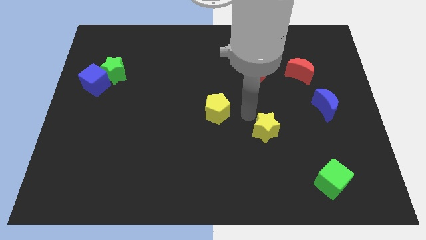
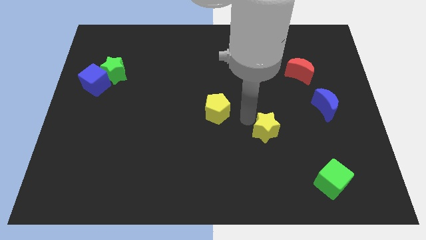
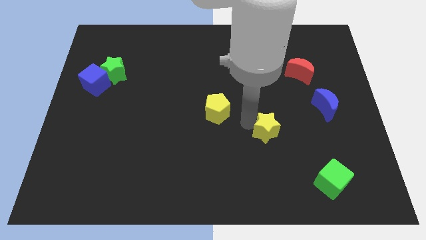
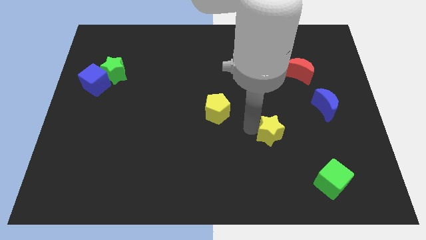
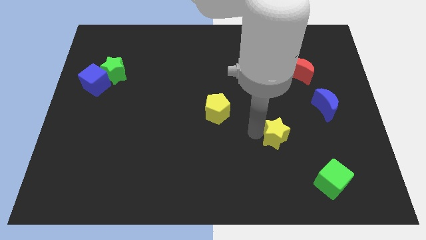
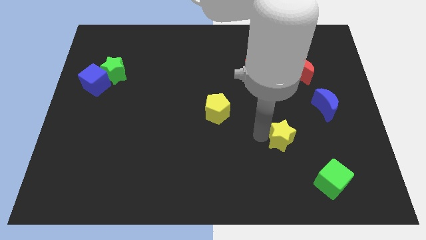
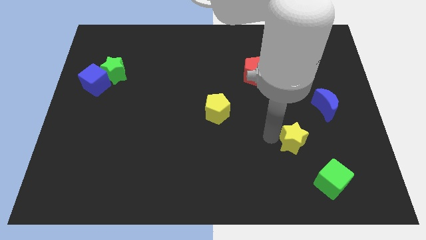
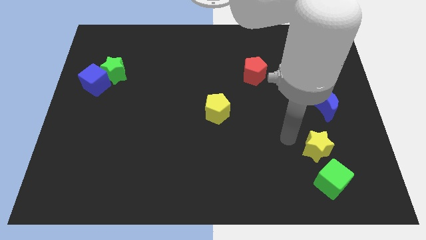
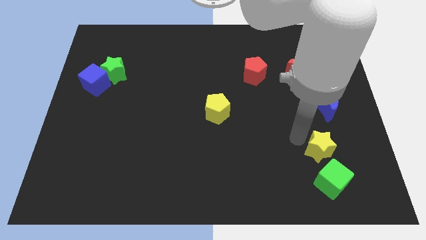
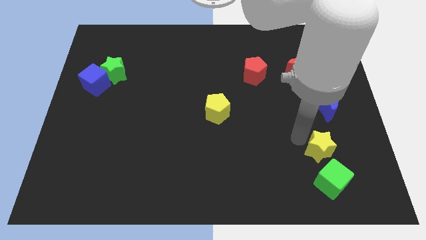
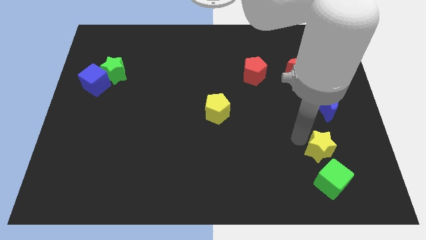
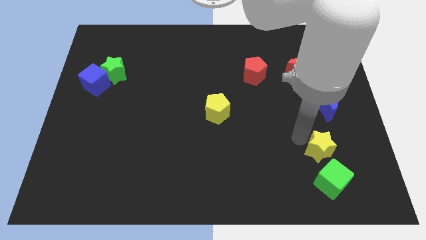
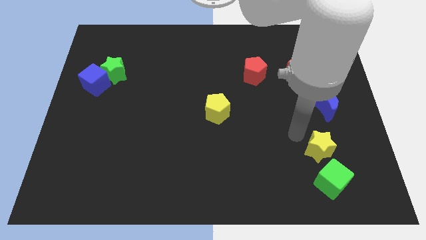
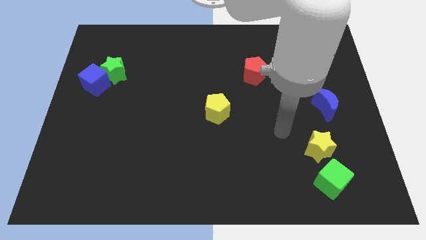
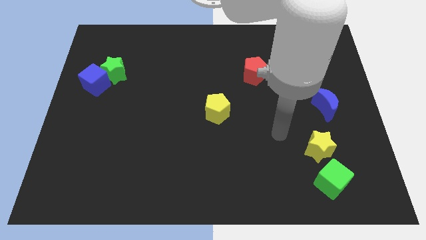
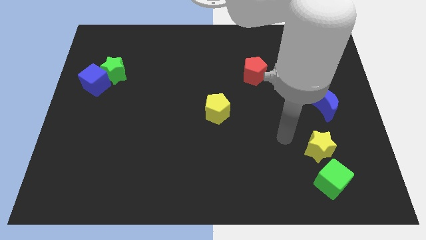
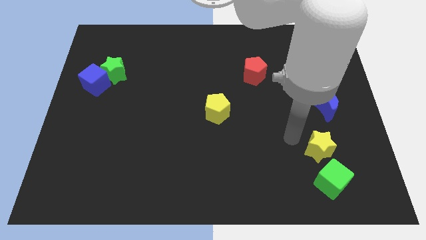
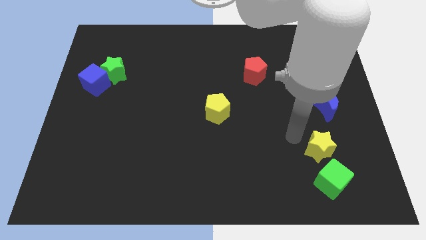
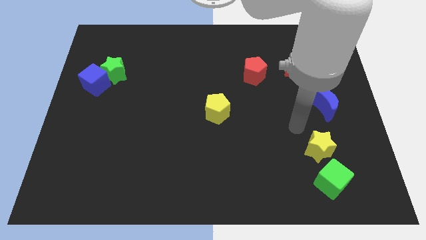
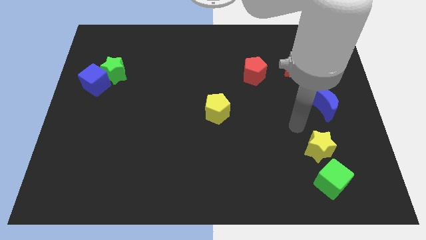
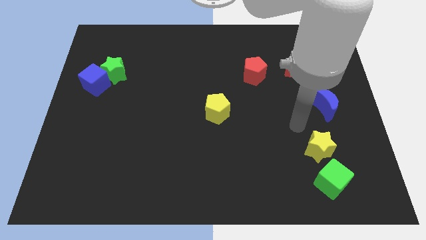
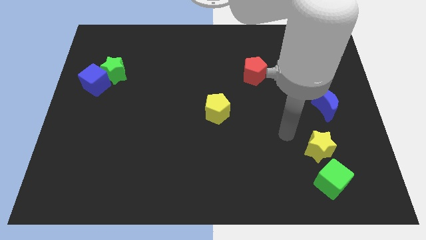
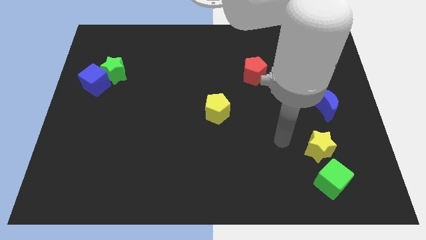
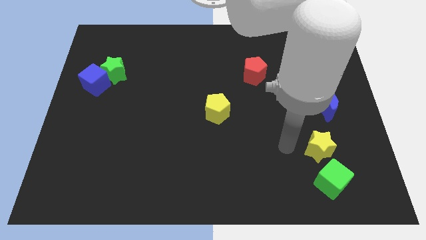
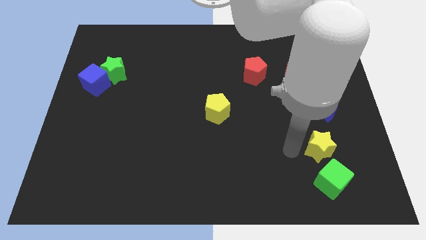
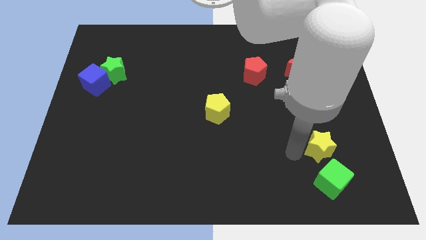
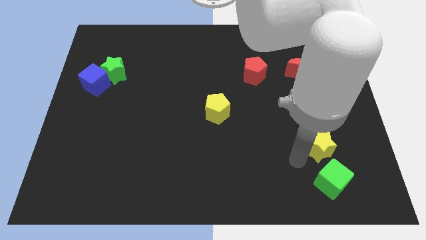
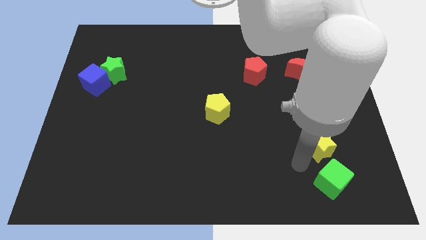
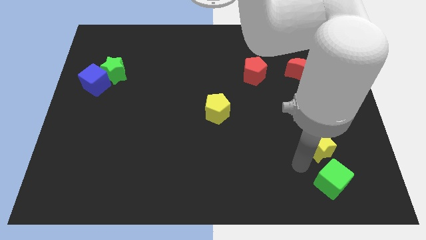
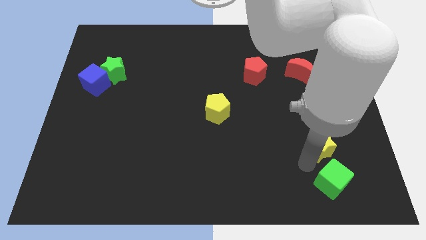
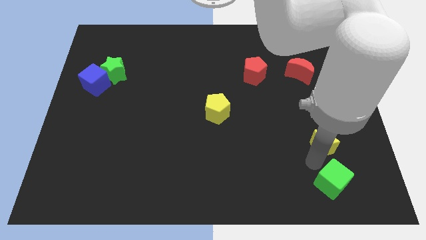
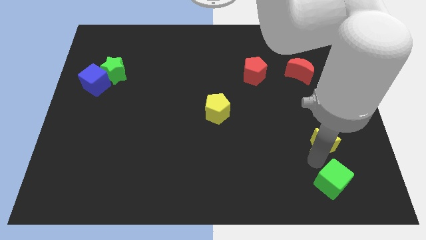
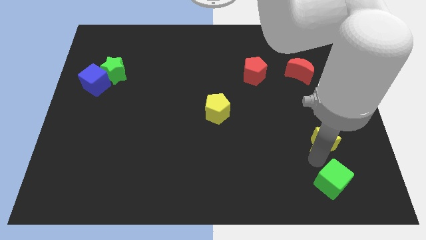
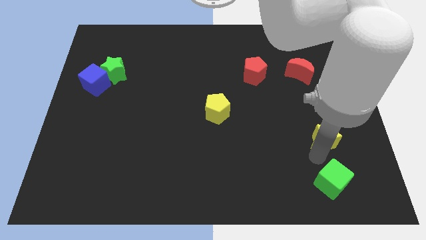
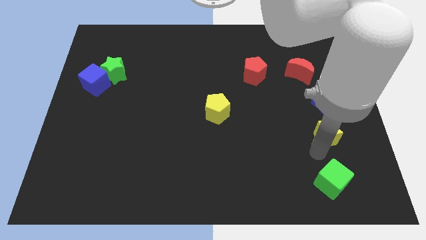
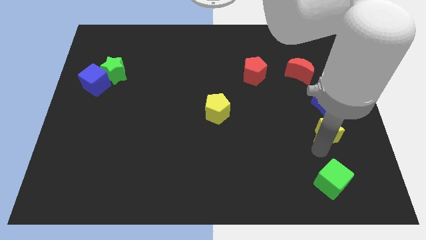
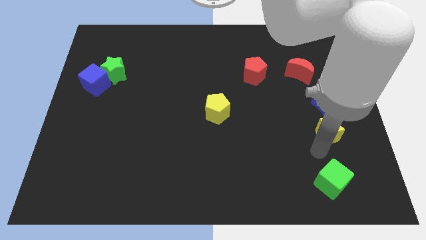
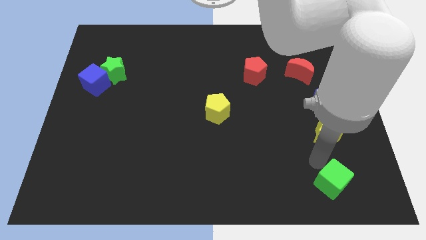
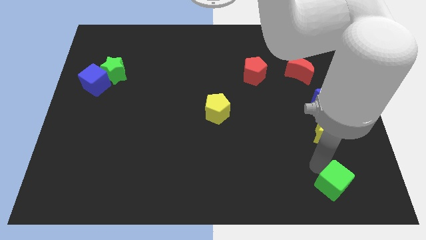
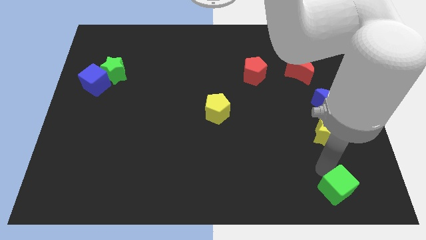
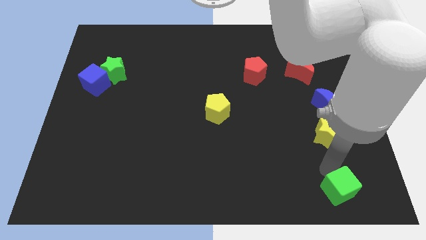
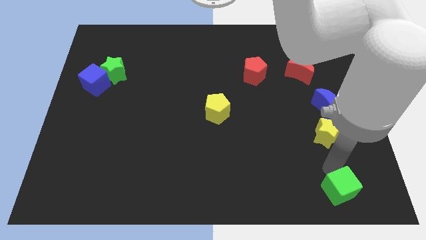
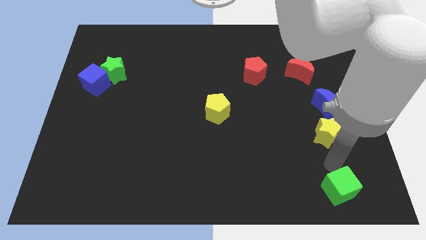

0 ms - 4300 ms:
move the yellow star below the blue moon

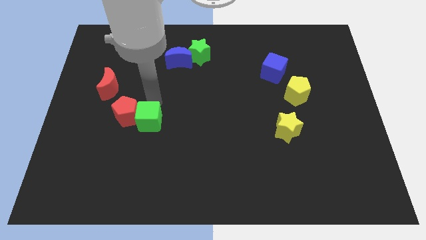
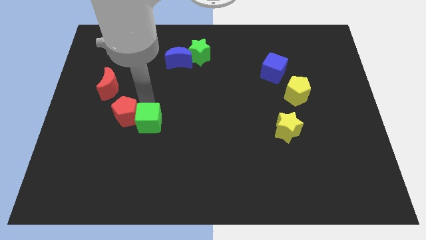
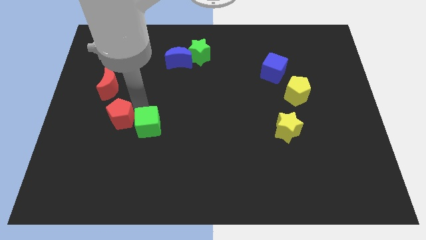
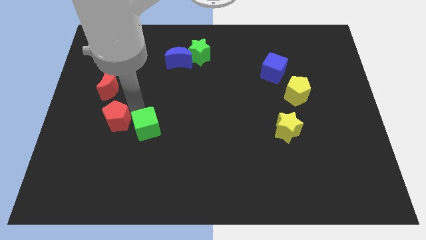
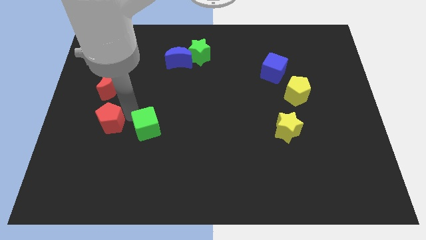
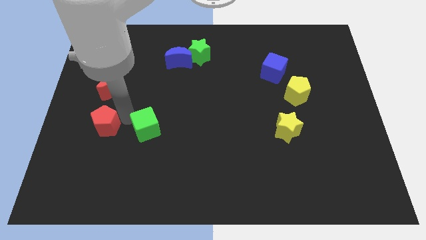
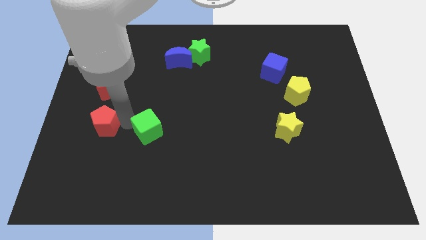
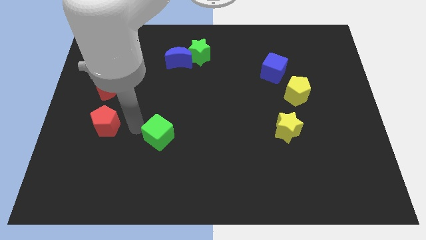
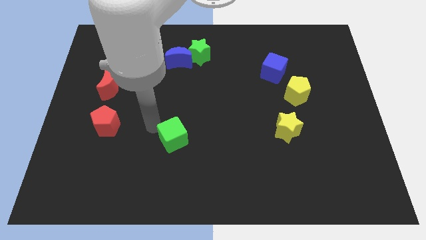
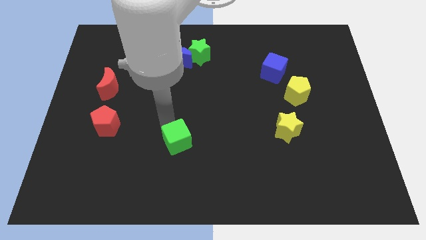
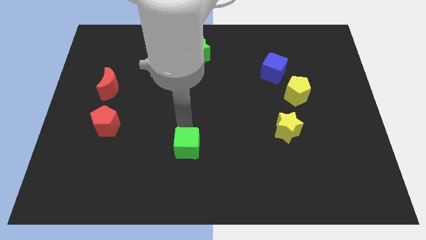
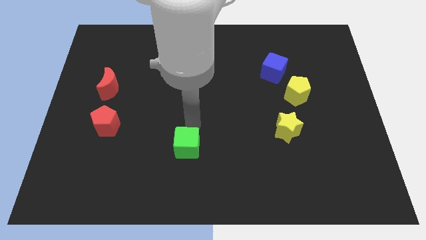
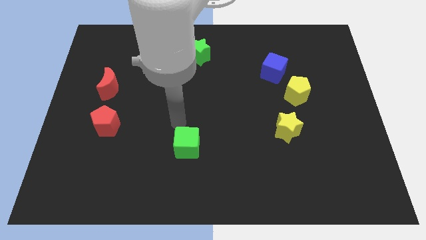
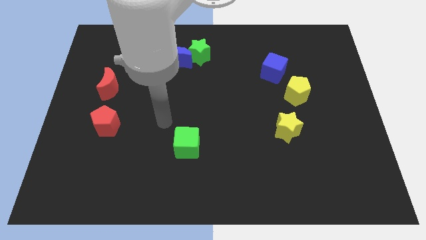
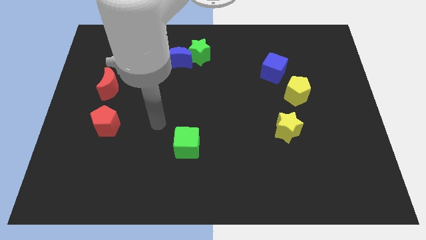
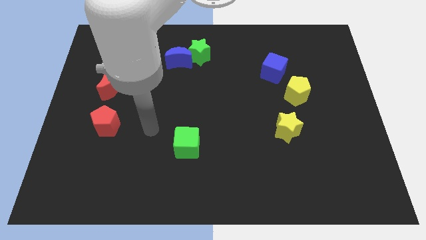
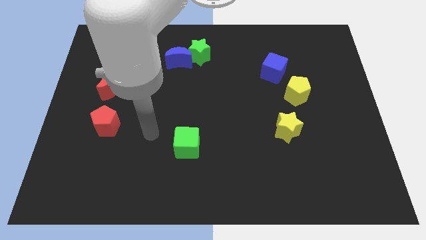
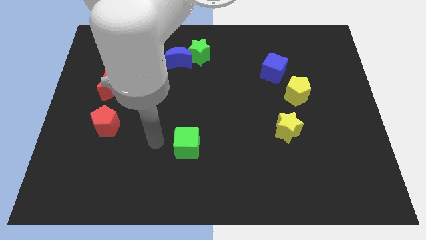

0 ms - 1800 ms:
separate the green star from the red pentagon

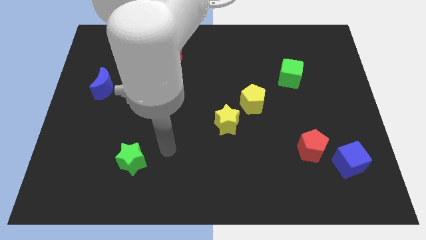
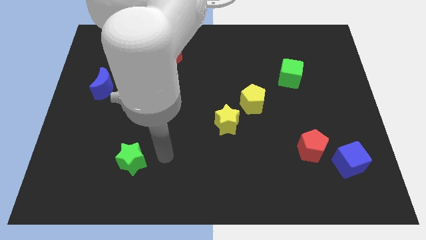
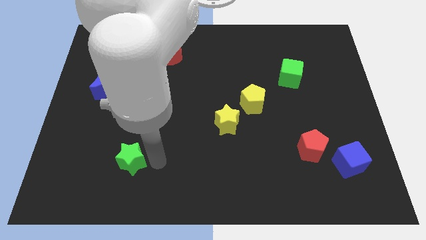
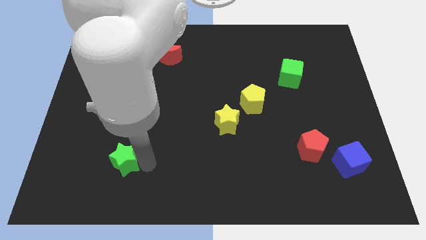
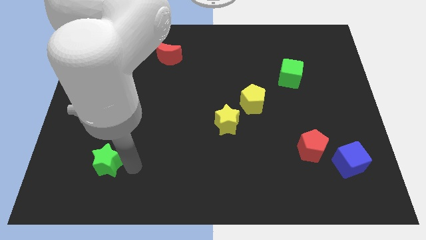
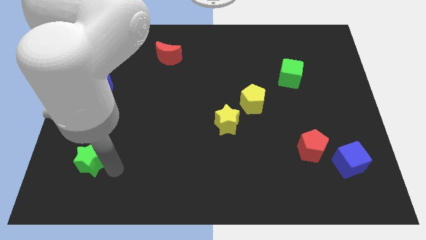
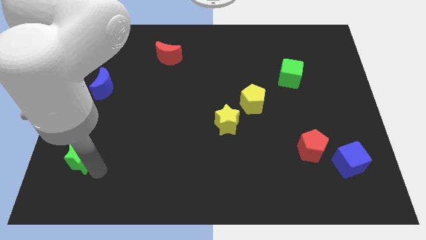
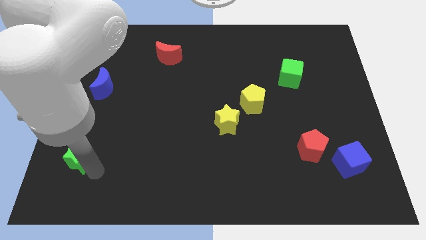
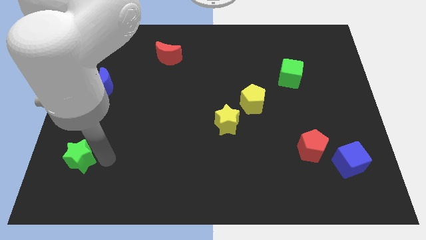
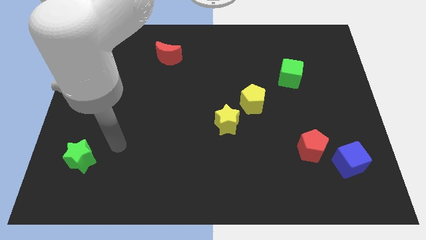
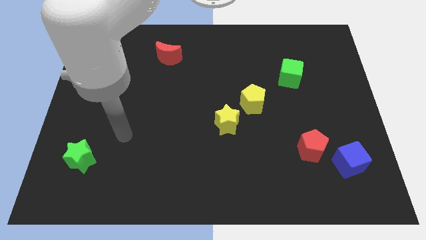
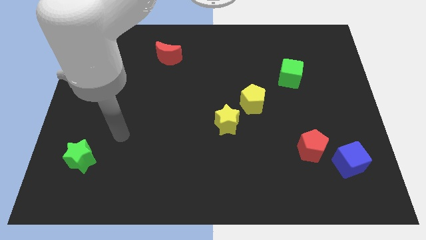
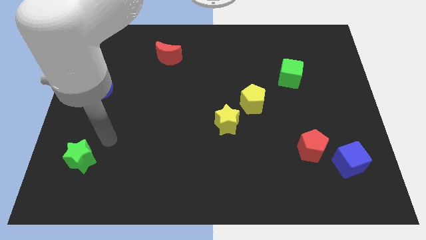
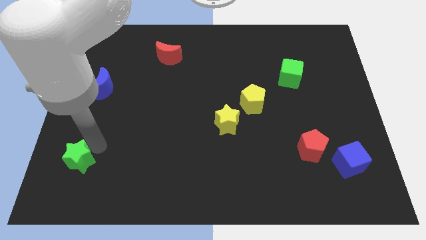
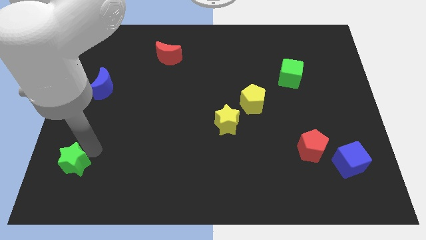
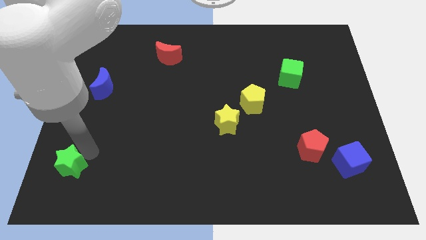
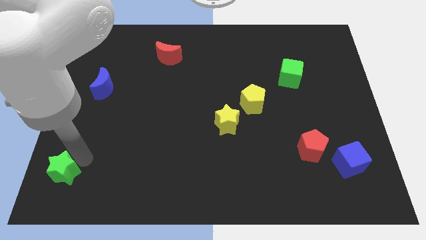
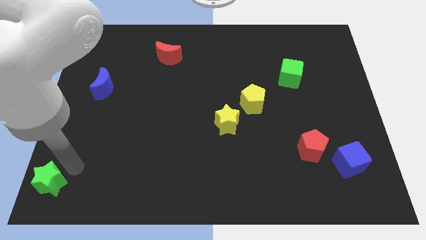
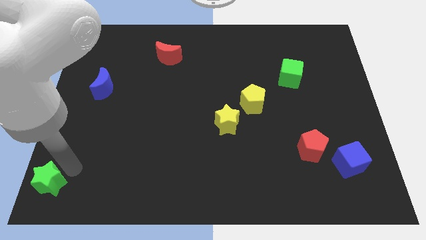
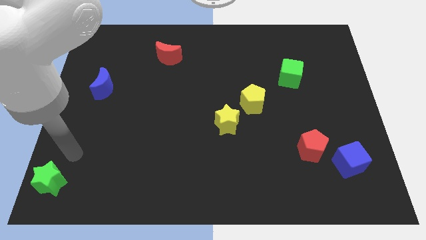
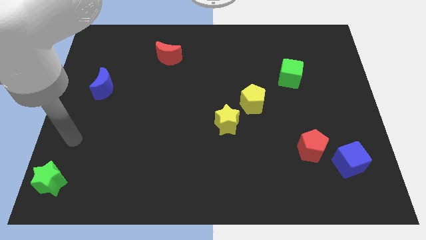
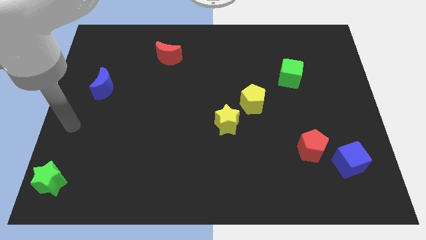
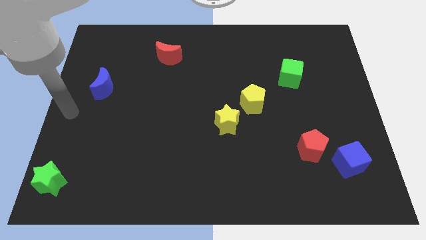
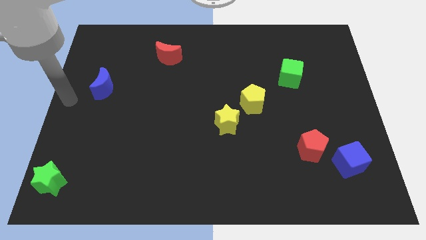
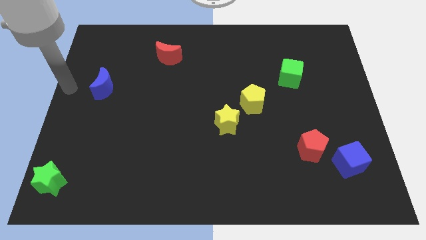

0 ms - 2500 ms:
move the green star to the bottom left of the board

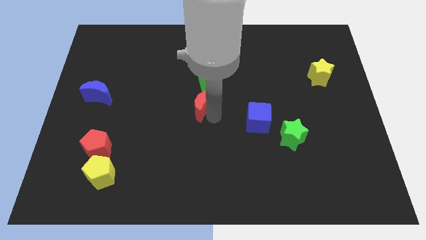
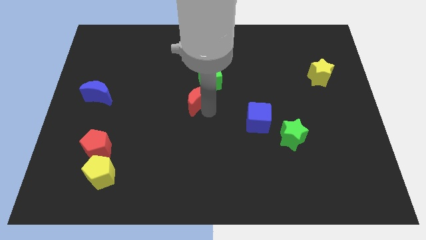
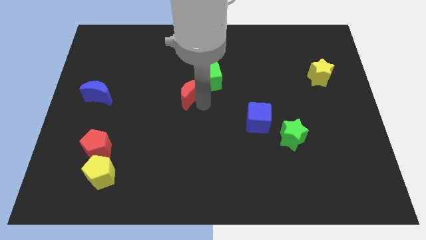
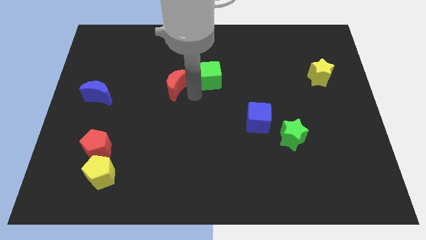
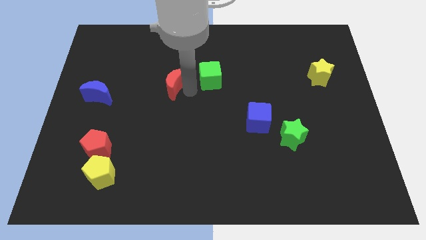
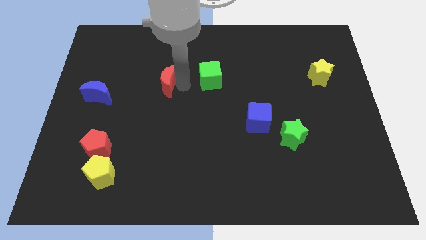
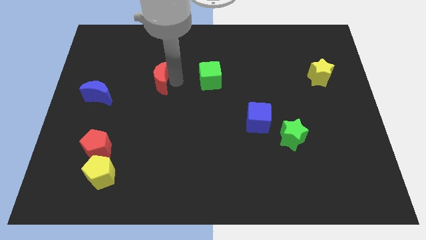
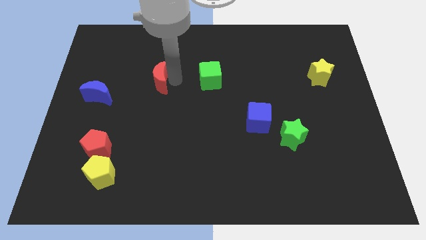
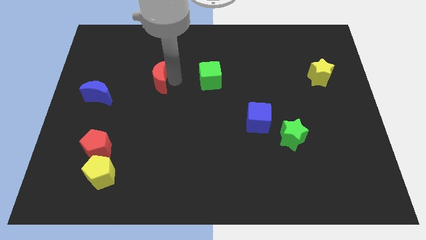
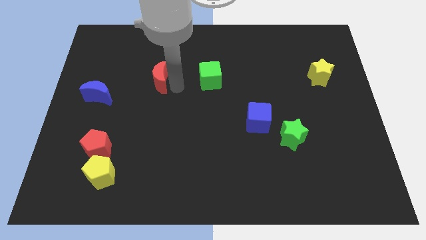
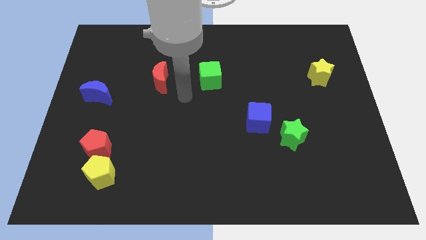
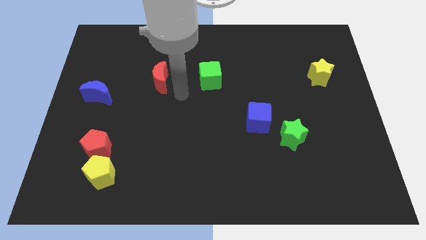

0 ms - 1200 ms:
move the red crescent to the left of the green cube
